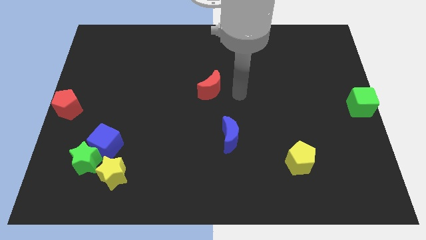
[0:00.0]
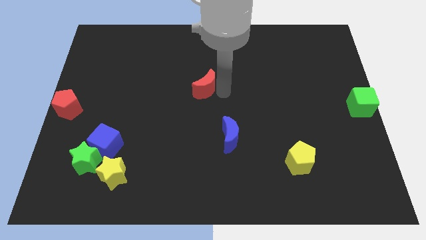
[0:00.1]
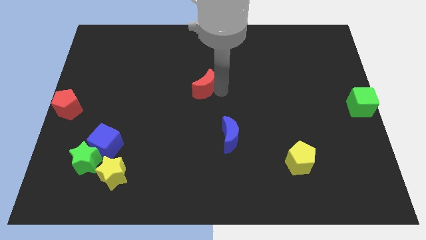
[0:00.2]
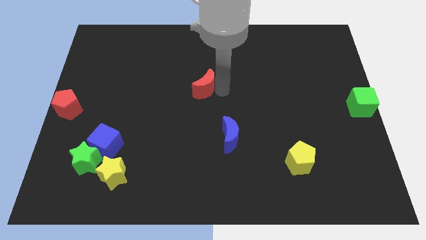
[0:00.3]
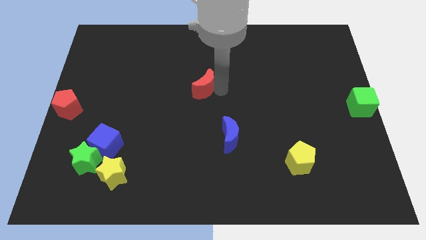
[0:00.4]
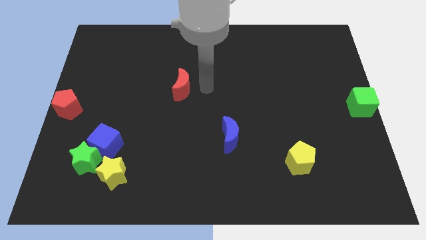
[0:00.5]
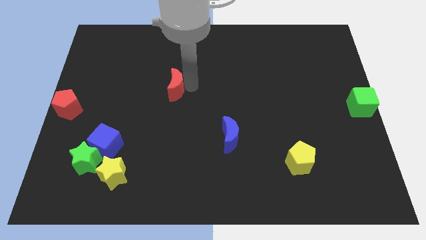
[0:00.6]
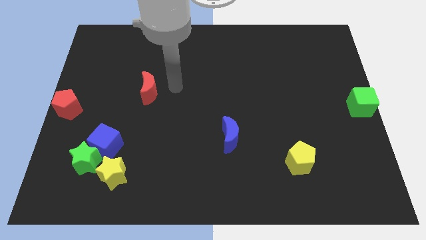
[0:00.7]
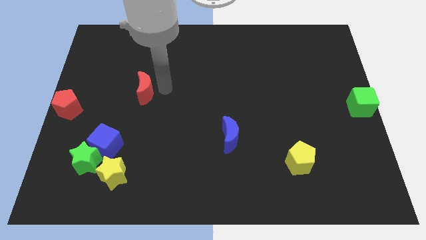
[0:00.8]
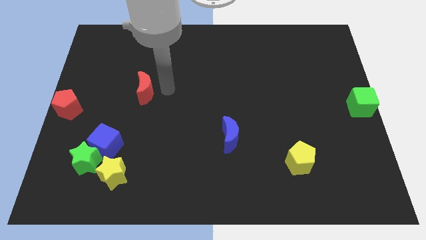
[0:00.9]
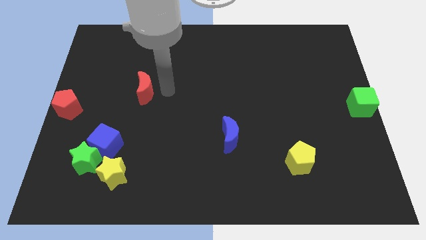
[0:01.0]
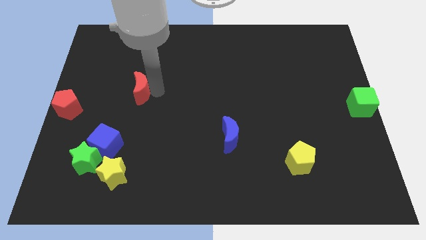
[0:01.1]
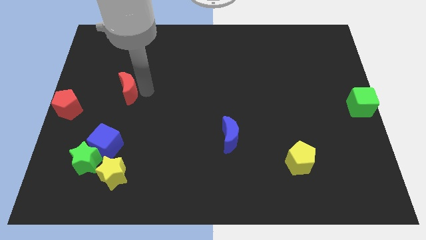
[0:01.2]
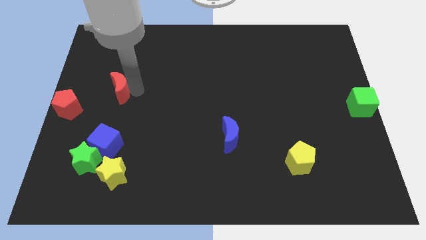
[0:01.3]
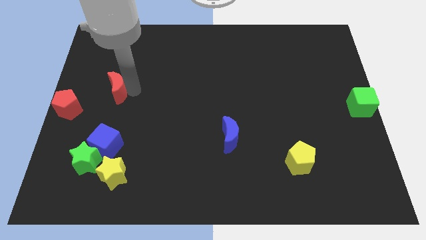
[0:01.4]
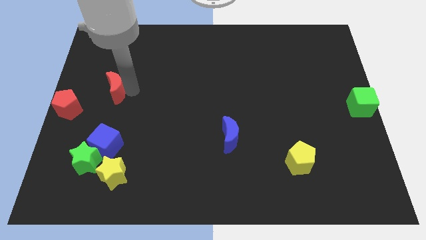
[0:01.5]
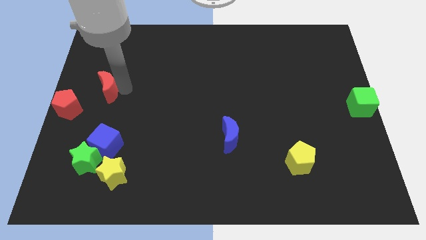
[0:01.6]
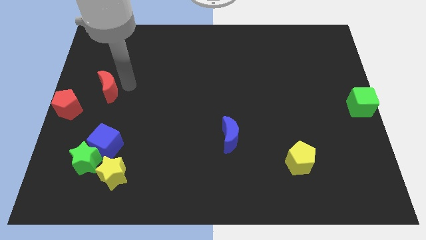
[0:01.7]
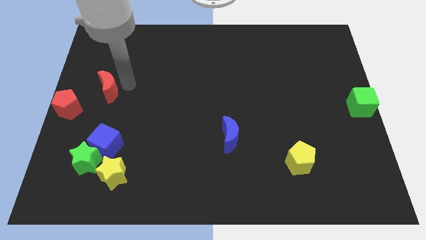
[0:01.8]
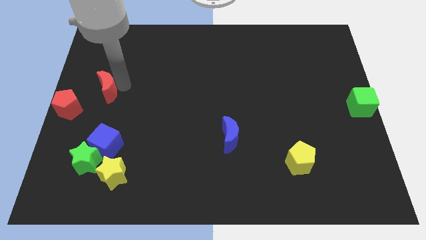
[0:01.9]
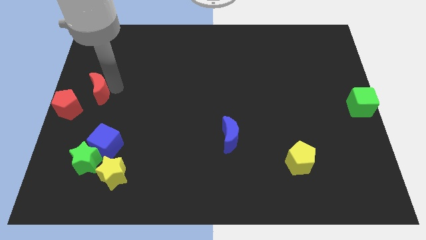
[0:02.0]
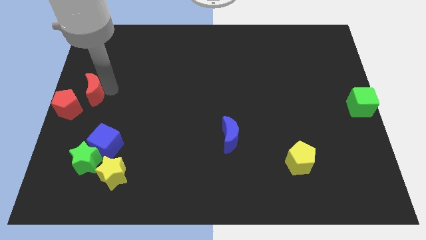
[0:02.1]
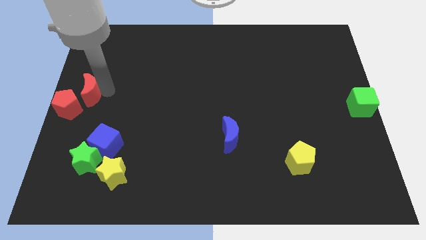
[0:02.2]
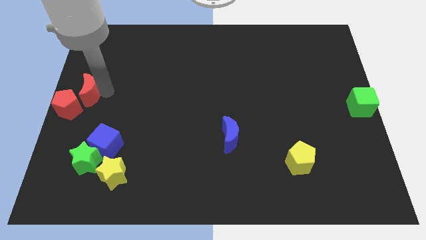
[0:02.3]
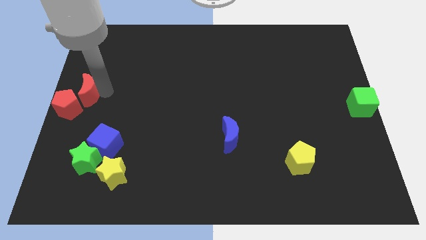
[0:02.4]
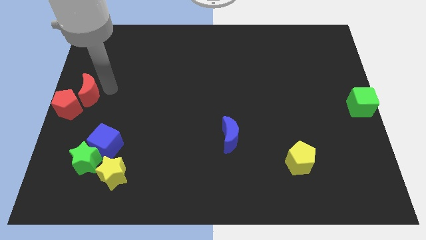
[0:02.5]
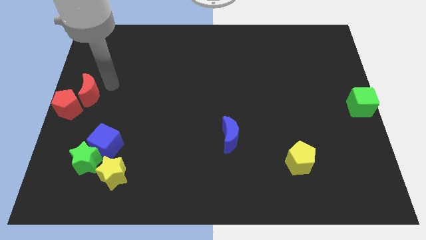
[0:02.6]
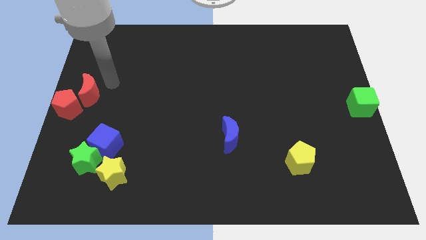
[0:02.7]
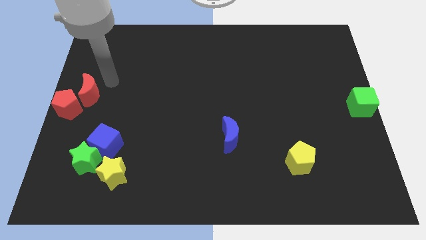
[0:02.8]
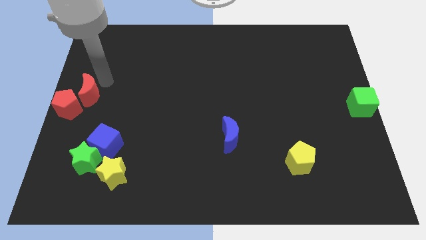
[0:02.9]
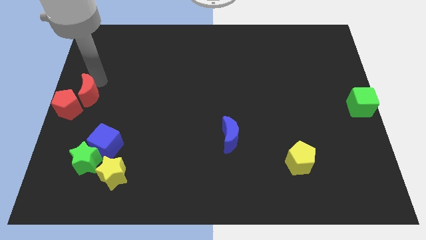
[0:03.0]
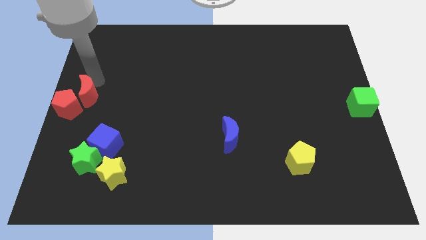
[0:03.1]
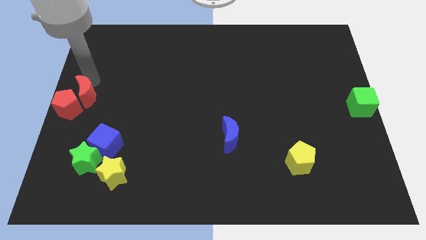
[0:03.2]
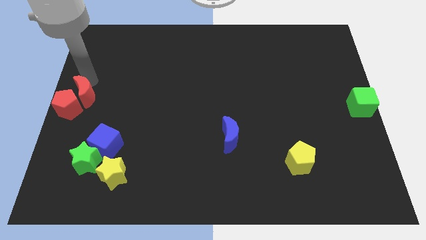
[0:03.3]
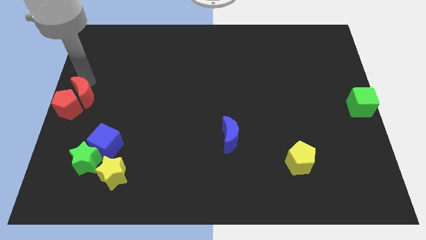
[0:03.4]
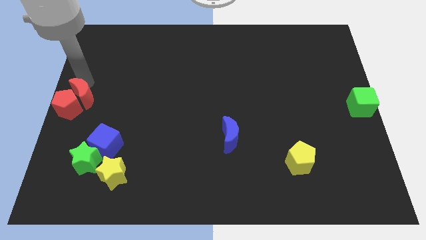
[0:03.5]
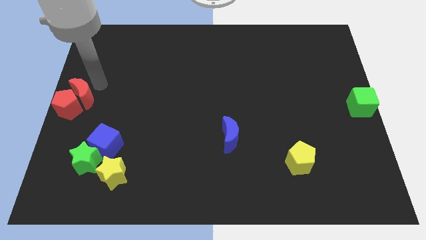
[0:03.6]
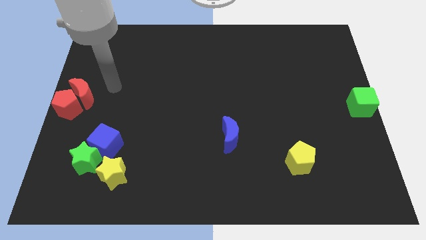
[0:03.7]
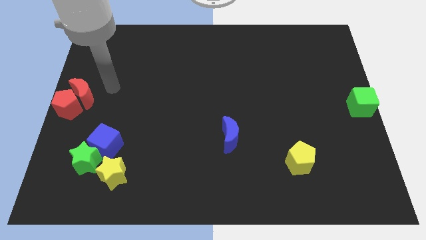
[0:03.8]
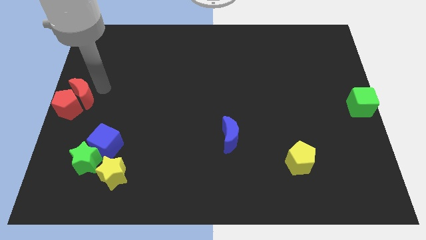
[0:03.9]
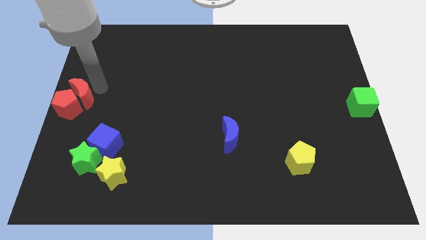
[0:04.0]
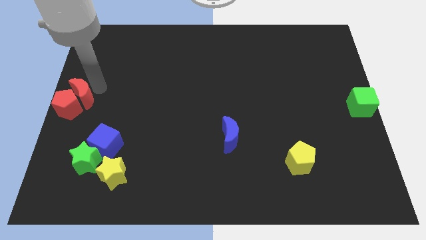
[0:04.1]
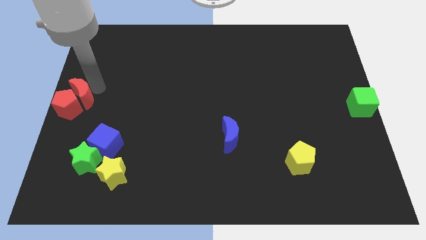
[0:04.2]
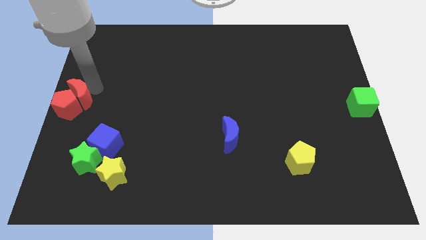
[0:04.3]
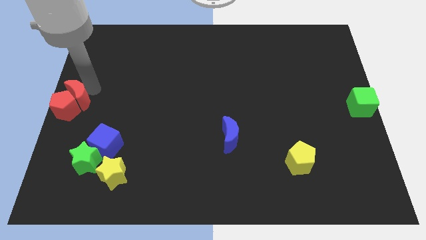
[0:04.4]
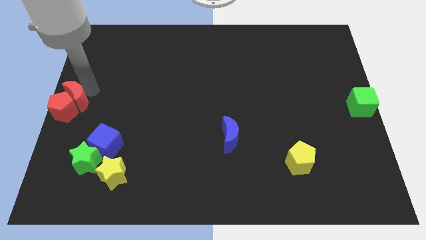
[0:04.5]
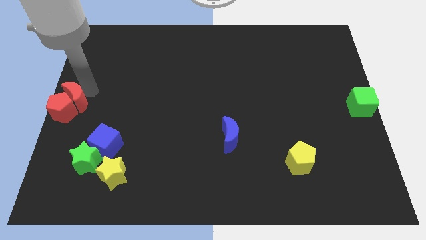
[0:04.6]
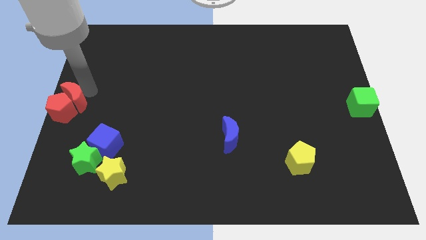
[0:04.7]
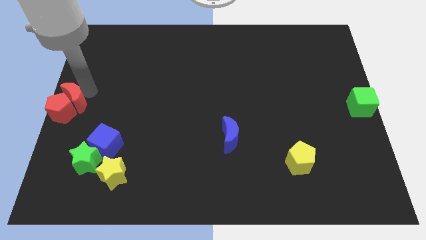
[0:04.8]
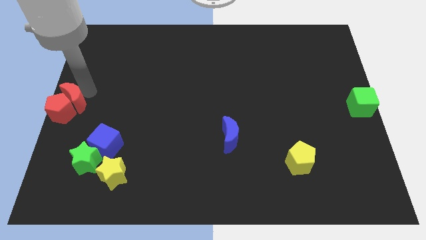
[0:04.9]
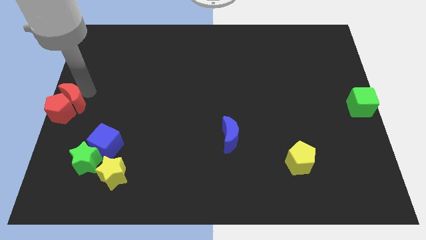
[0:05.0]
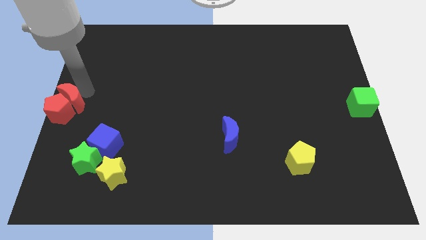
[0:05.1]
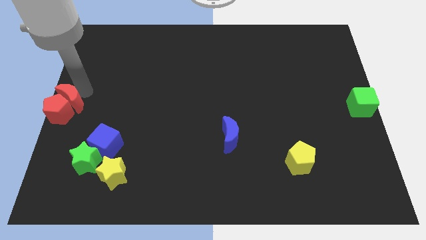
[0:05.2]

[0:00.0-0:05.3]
put the red crescent into the red pentagon

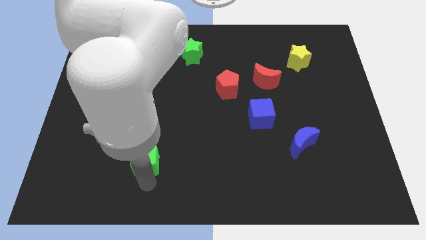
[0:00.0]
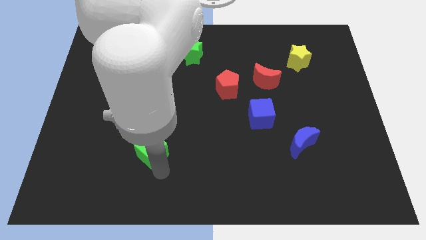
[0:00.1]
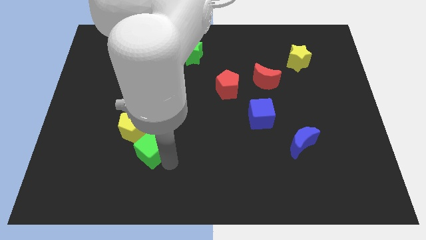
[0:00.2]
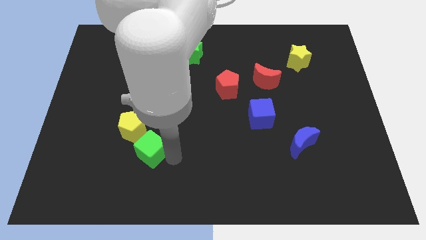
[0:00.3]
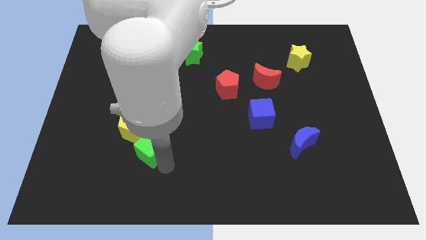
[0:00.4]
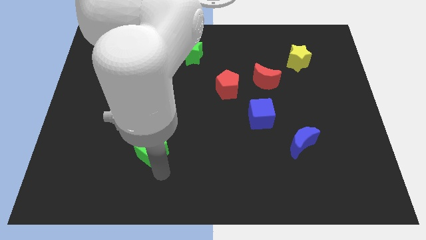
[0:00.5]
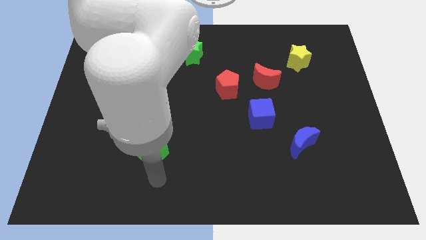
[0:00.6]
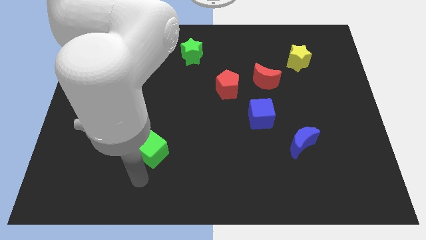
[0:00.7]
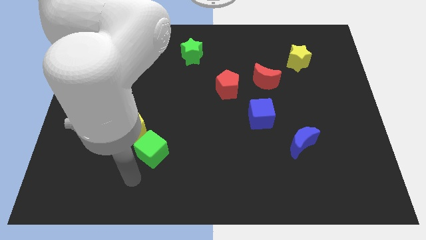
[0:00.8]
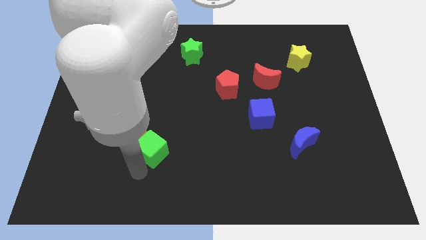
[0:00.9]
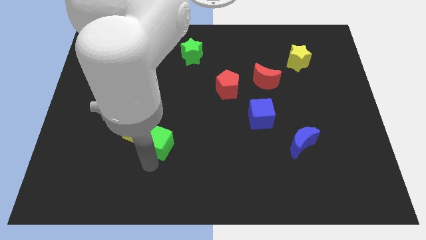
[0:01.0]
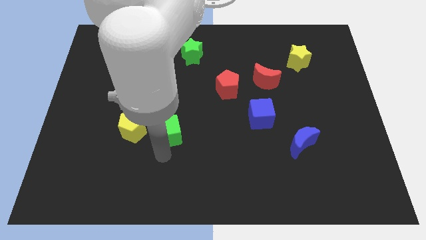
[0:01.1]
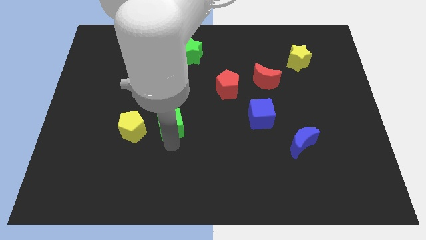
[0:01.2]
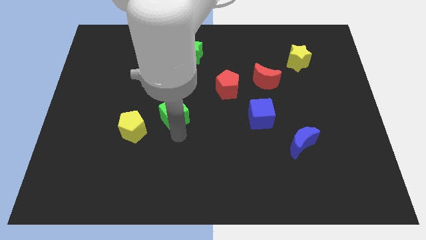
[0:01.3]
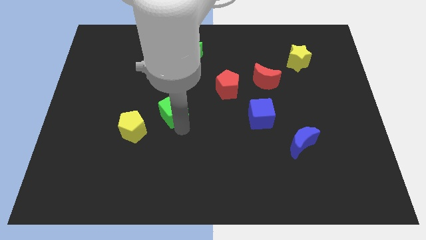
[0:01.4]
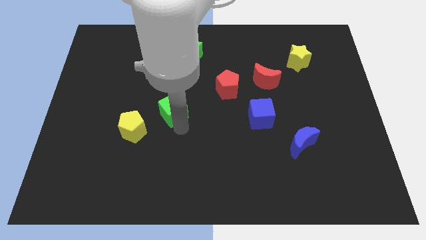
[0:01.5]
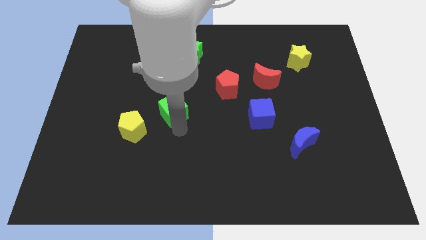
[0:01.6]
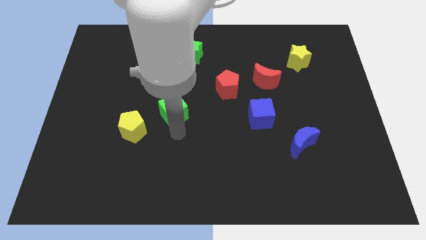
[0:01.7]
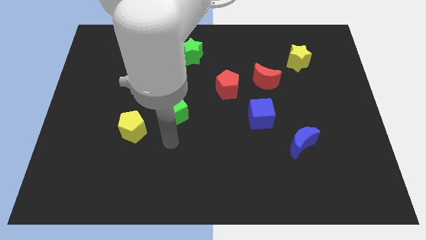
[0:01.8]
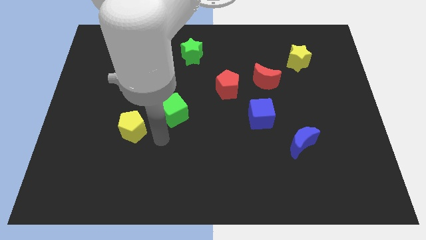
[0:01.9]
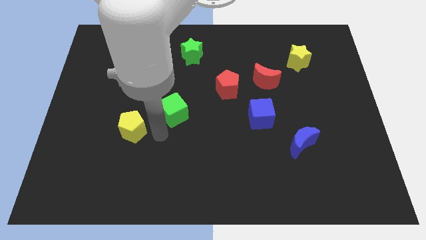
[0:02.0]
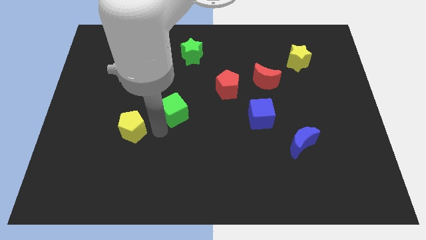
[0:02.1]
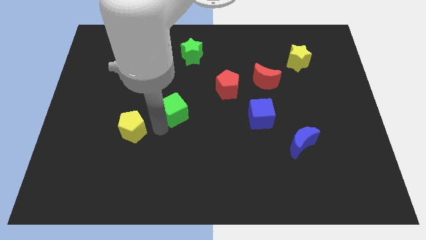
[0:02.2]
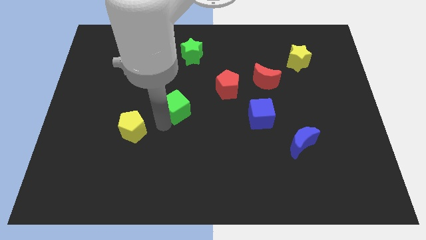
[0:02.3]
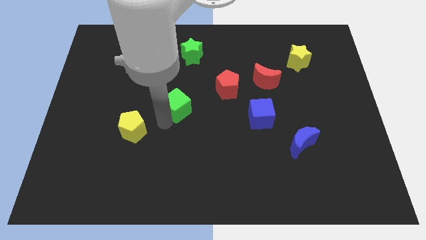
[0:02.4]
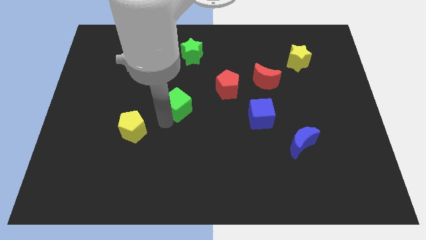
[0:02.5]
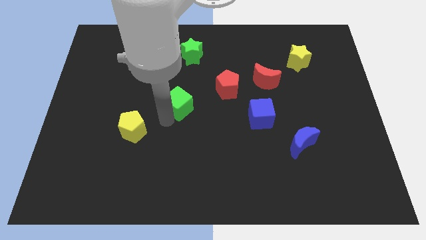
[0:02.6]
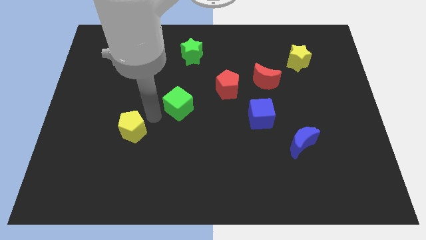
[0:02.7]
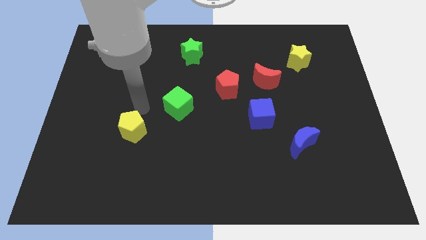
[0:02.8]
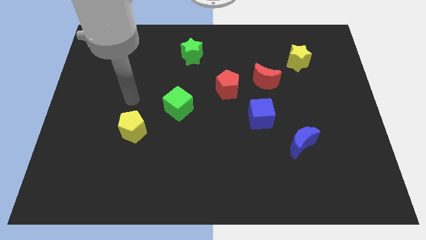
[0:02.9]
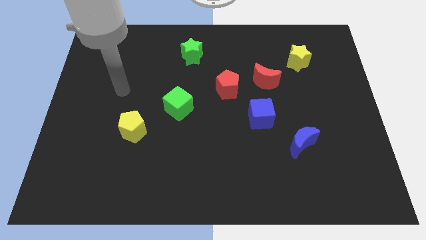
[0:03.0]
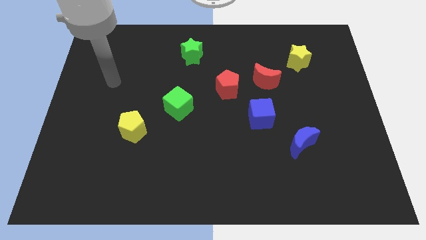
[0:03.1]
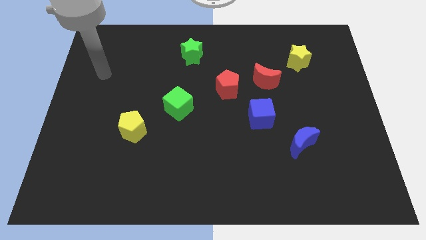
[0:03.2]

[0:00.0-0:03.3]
move the green cube between the red pentagon and yellow pentagon

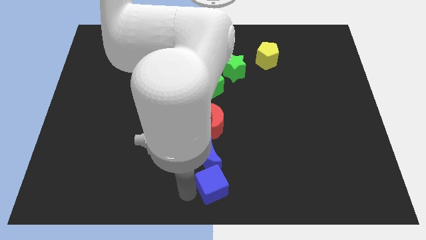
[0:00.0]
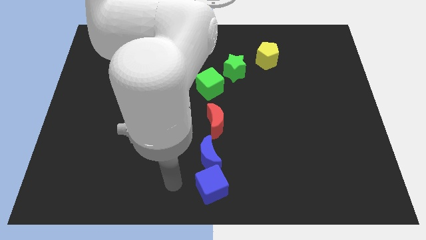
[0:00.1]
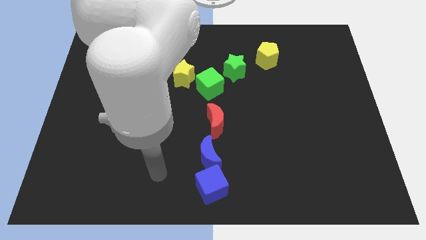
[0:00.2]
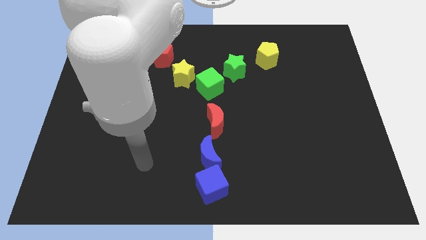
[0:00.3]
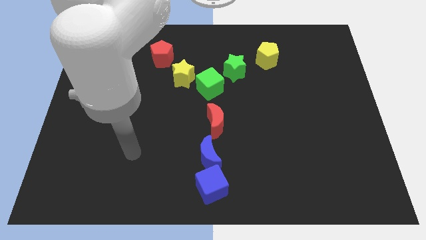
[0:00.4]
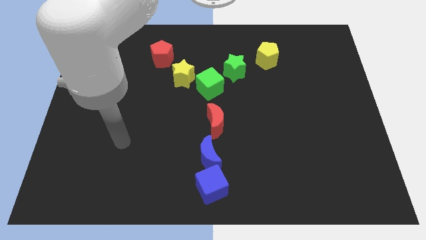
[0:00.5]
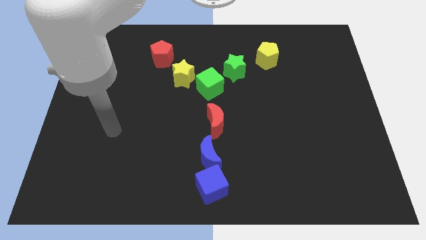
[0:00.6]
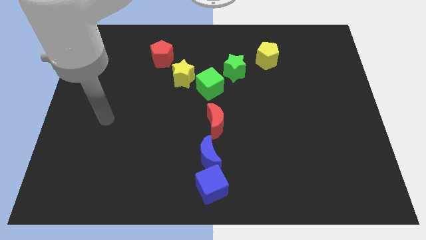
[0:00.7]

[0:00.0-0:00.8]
take your arm away from blue cube
